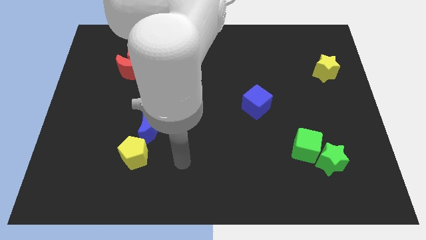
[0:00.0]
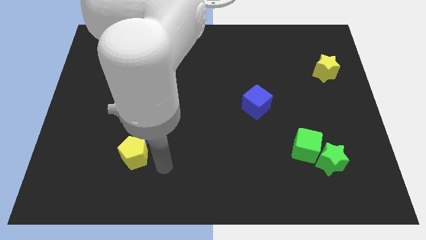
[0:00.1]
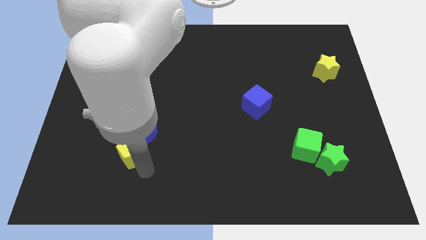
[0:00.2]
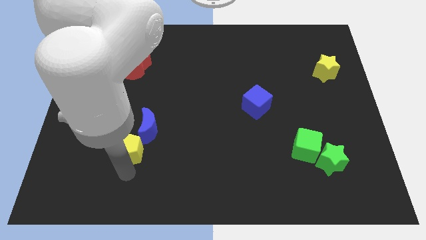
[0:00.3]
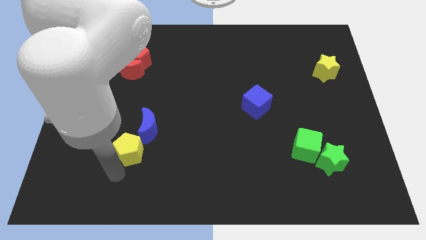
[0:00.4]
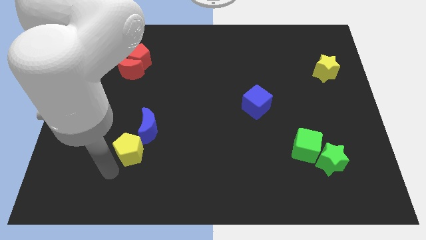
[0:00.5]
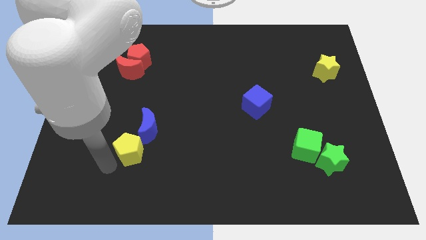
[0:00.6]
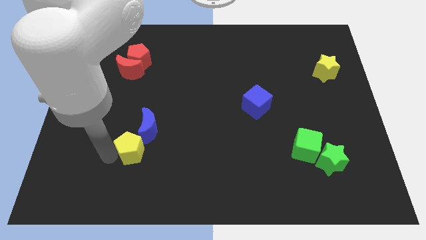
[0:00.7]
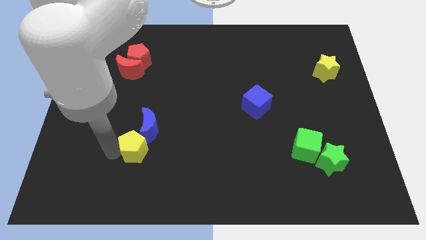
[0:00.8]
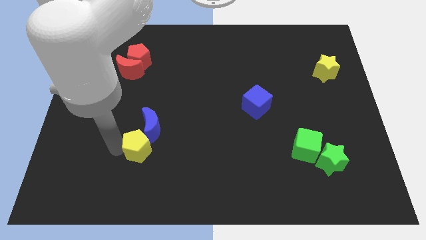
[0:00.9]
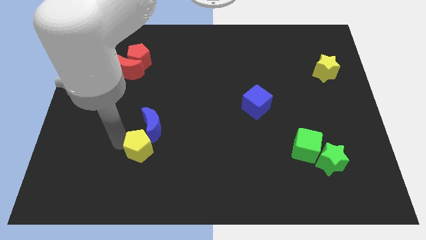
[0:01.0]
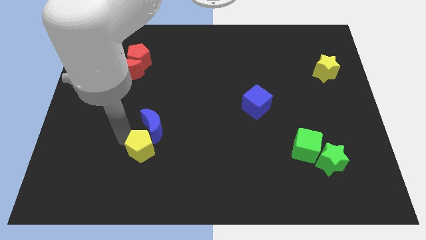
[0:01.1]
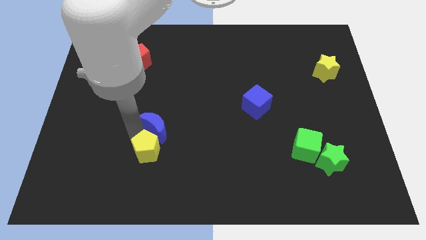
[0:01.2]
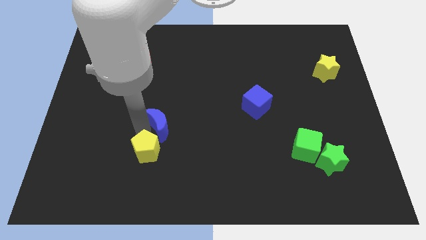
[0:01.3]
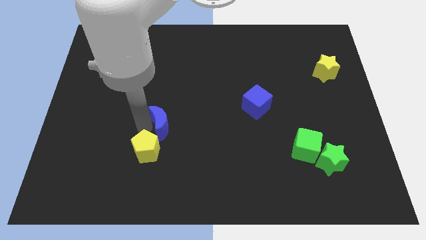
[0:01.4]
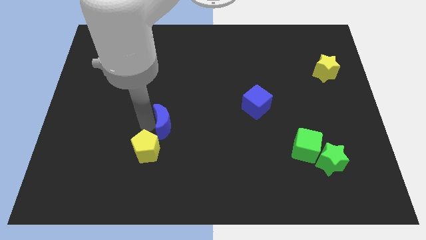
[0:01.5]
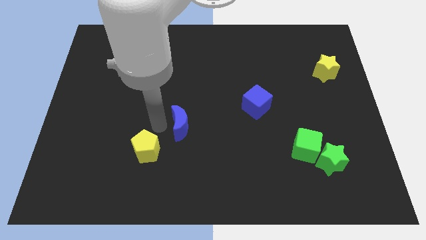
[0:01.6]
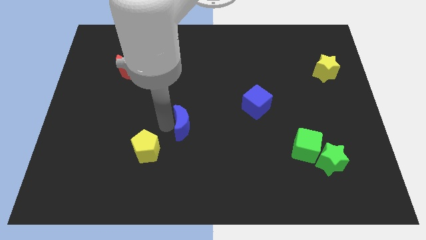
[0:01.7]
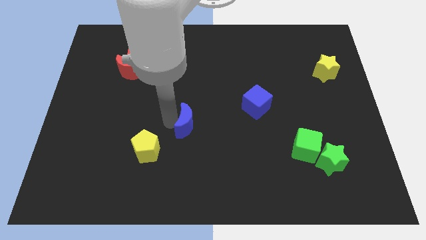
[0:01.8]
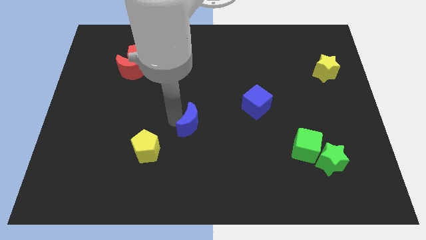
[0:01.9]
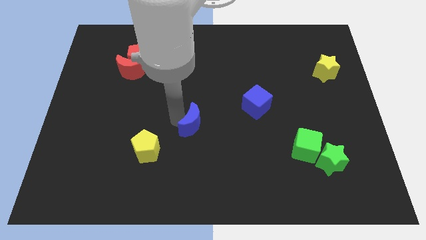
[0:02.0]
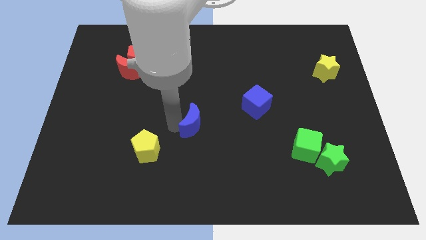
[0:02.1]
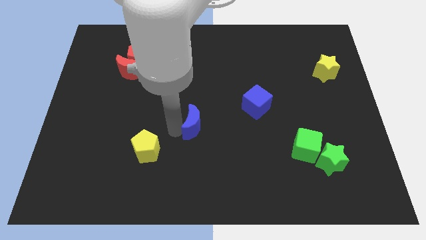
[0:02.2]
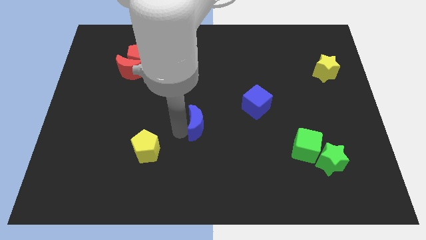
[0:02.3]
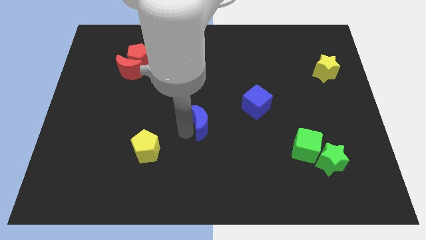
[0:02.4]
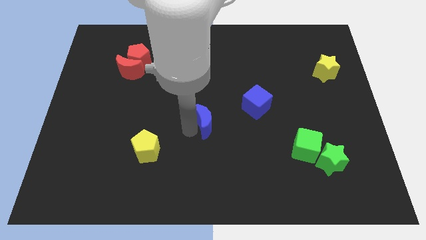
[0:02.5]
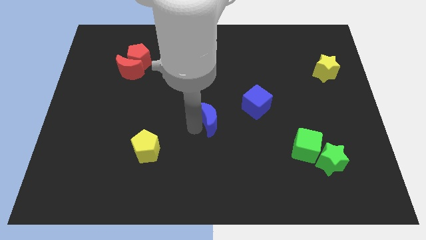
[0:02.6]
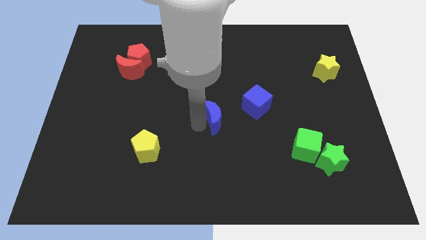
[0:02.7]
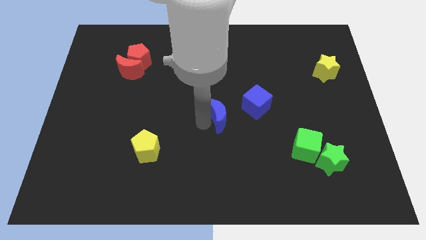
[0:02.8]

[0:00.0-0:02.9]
separate blue moon from the yellow pentagon

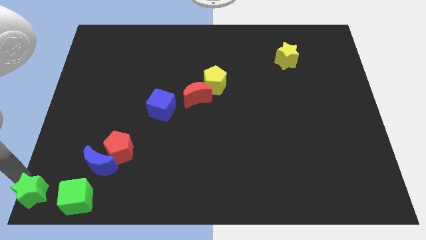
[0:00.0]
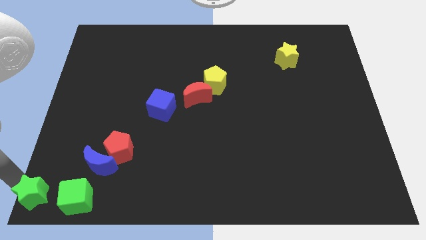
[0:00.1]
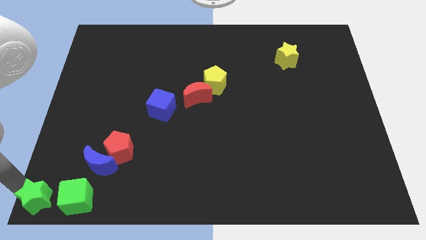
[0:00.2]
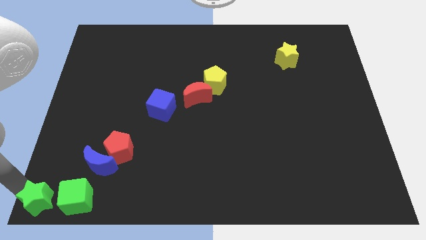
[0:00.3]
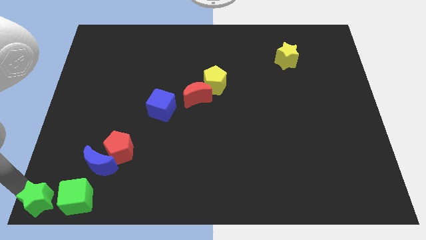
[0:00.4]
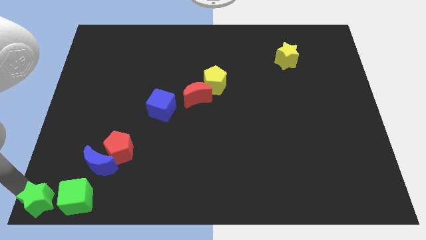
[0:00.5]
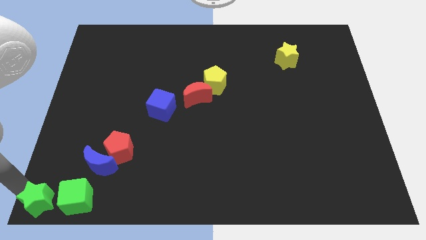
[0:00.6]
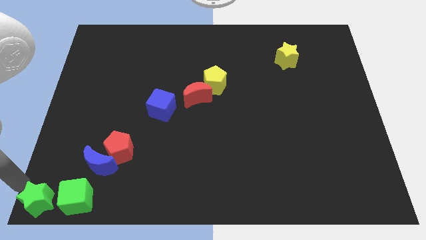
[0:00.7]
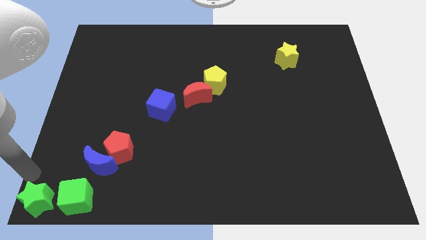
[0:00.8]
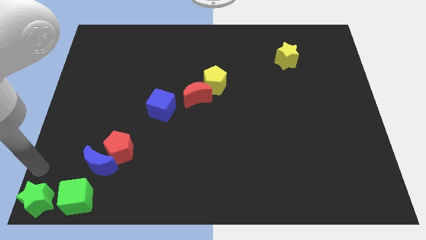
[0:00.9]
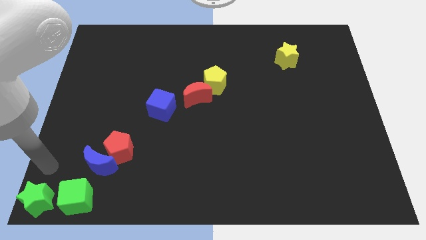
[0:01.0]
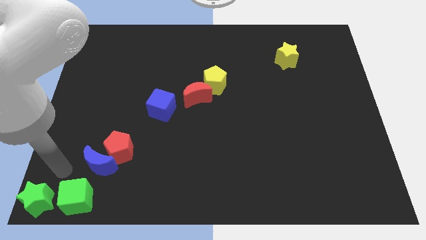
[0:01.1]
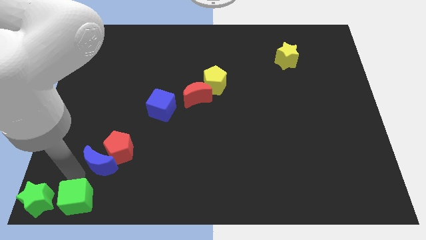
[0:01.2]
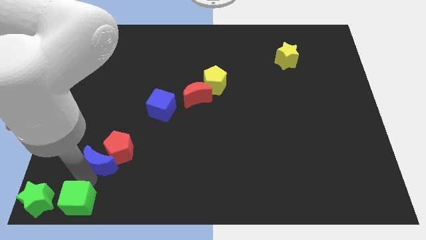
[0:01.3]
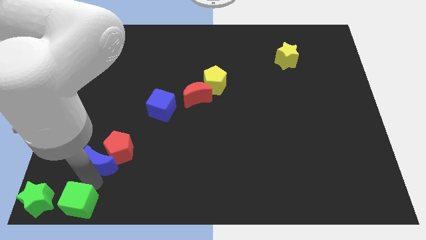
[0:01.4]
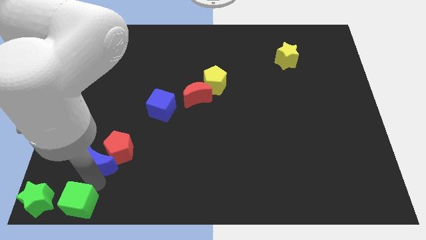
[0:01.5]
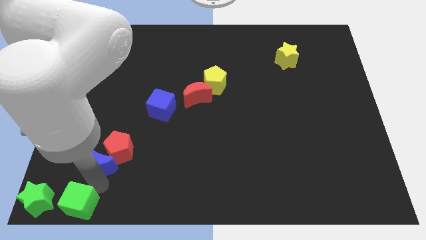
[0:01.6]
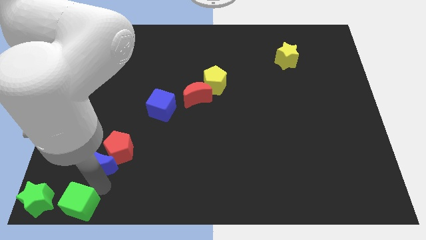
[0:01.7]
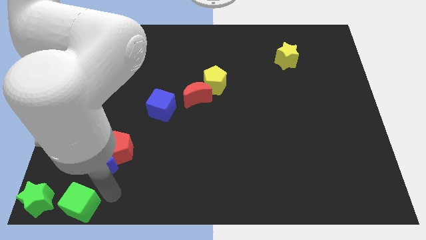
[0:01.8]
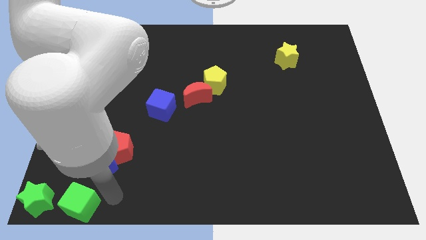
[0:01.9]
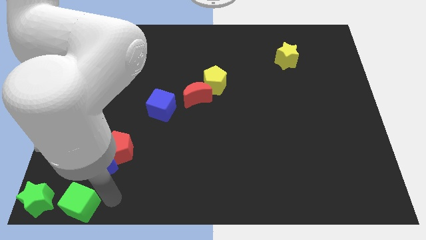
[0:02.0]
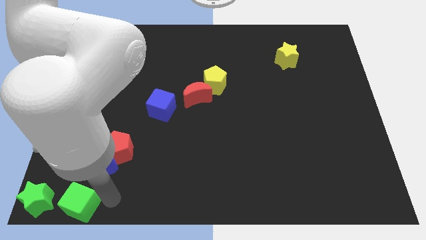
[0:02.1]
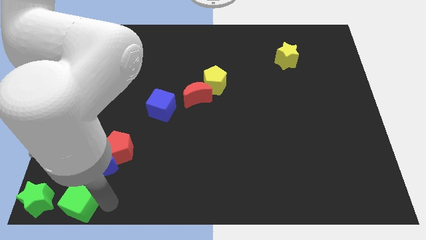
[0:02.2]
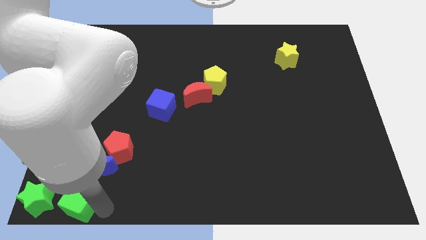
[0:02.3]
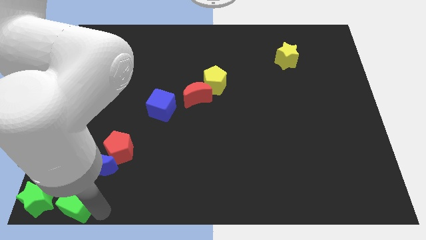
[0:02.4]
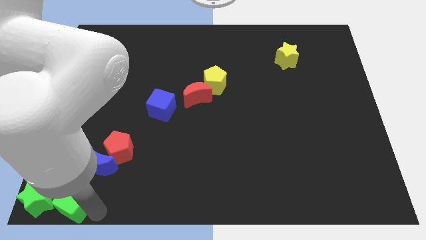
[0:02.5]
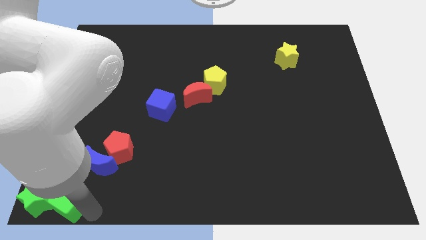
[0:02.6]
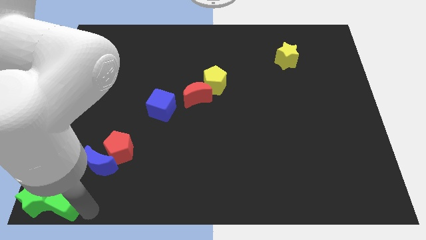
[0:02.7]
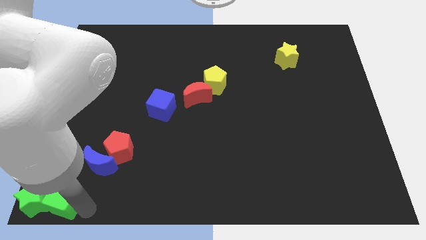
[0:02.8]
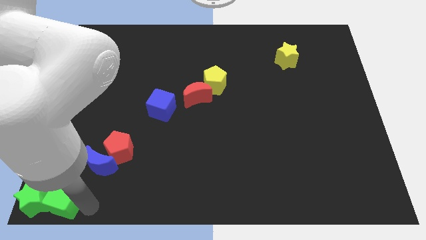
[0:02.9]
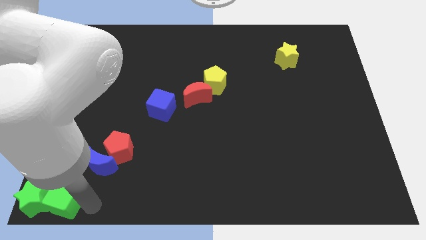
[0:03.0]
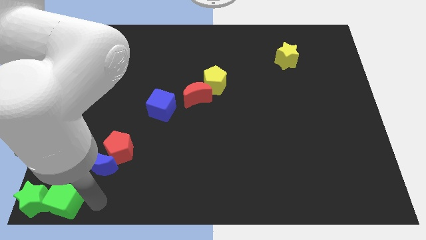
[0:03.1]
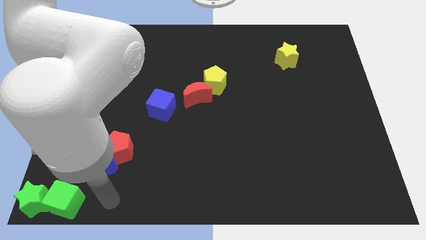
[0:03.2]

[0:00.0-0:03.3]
push the green blocks together at the bottom left corner

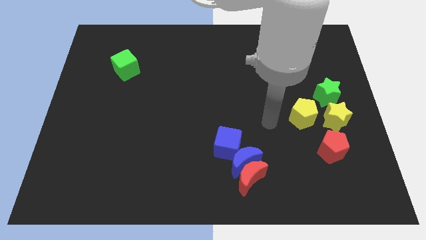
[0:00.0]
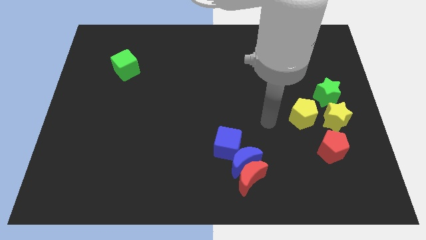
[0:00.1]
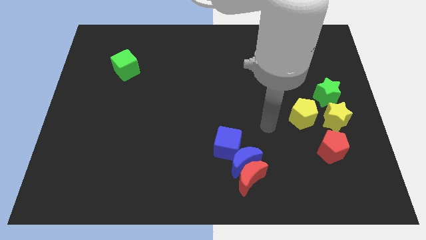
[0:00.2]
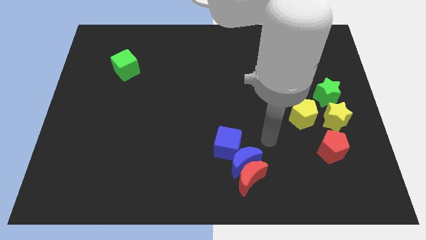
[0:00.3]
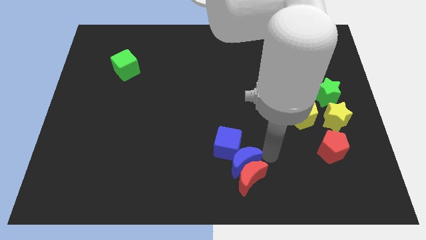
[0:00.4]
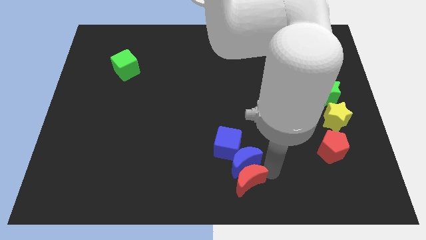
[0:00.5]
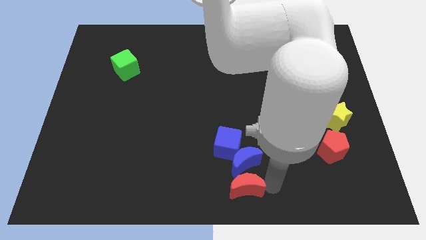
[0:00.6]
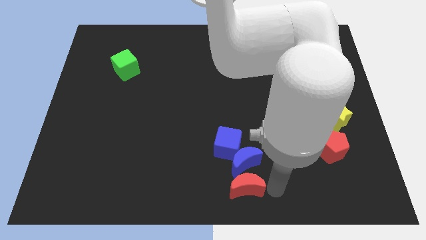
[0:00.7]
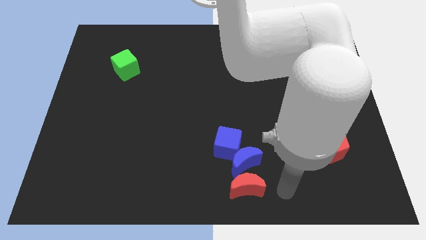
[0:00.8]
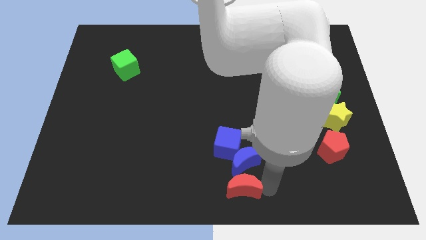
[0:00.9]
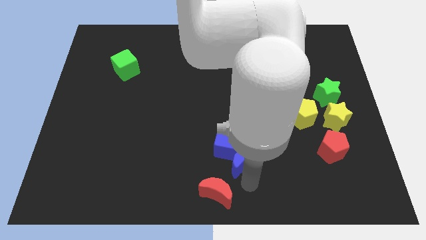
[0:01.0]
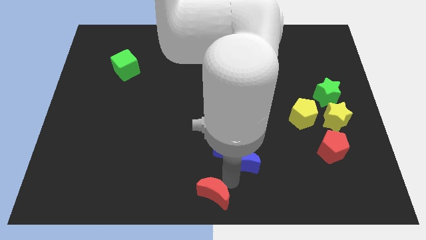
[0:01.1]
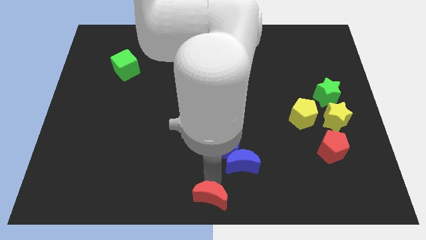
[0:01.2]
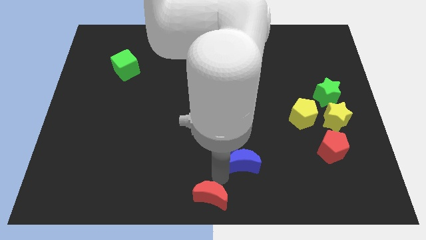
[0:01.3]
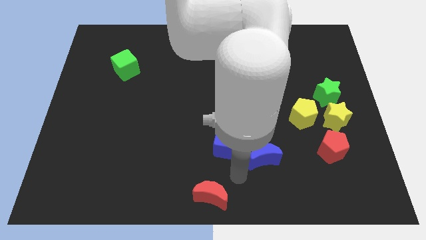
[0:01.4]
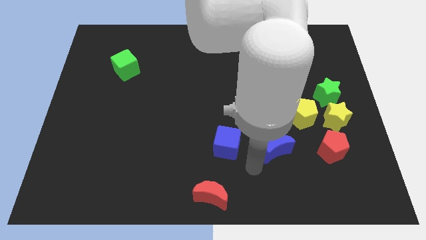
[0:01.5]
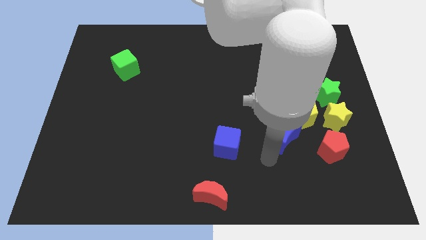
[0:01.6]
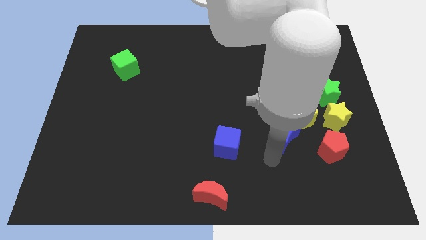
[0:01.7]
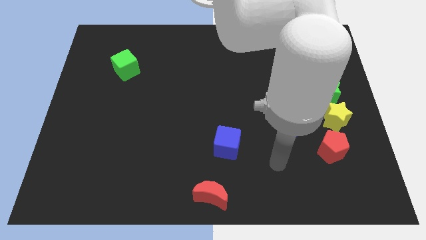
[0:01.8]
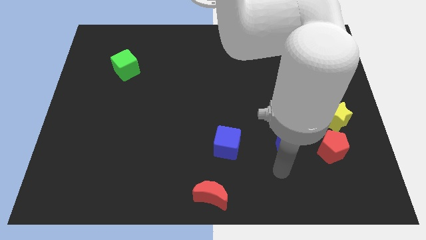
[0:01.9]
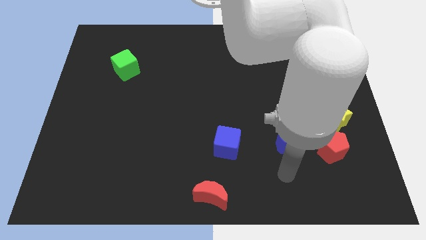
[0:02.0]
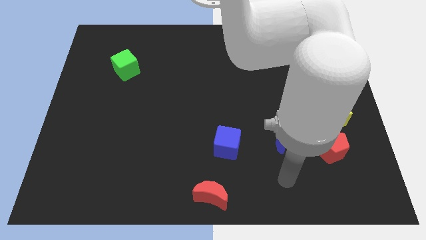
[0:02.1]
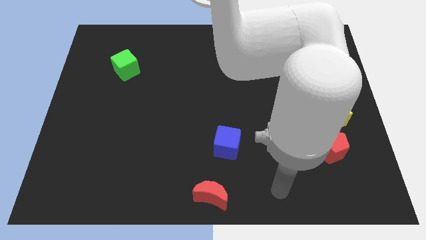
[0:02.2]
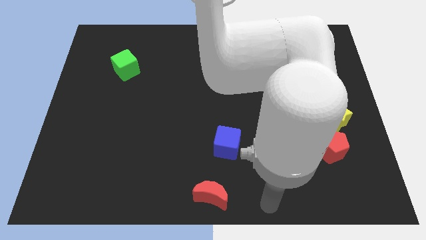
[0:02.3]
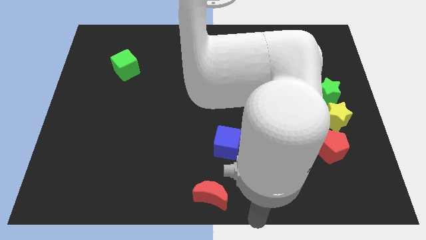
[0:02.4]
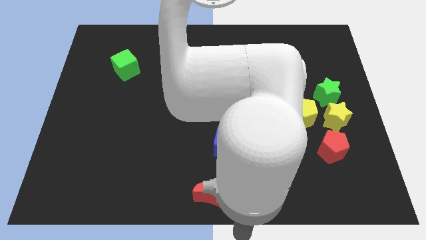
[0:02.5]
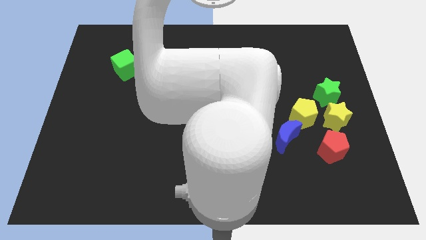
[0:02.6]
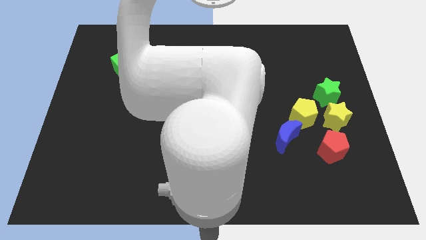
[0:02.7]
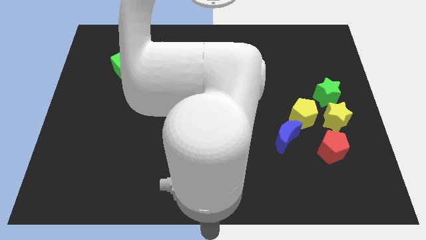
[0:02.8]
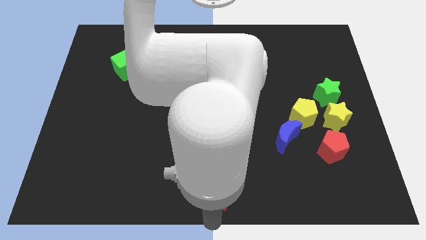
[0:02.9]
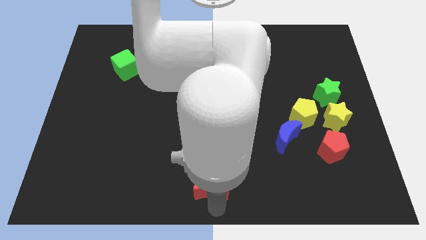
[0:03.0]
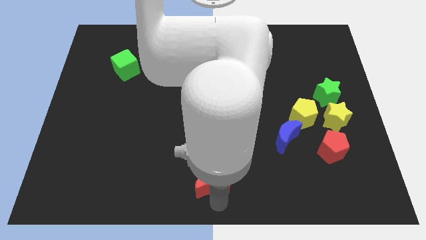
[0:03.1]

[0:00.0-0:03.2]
separate red moon and blue moon
